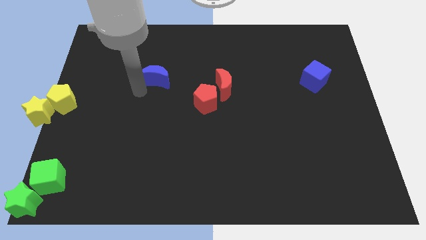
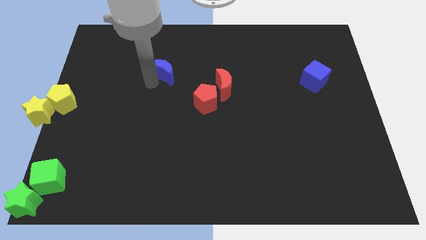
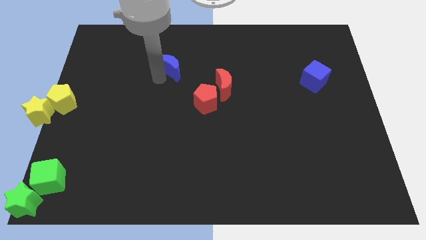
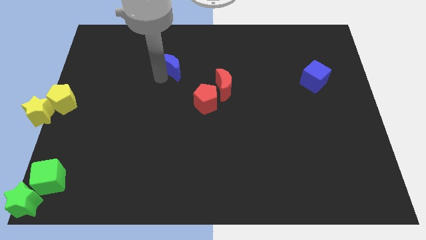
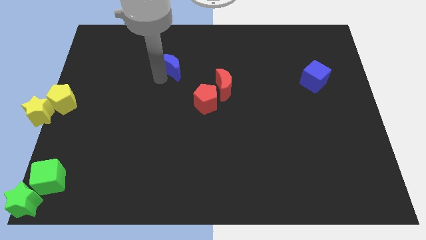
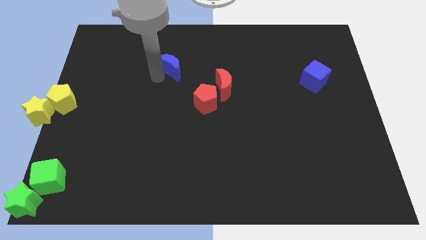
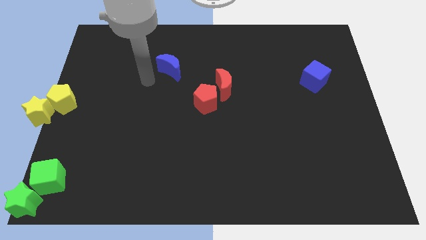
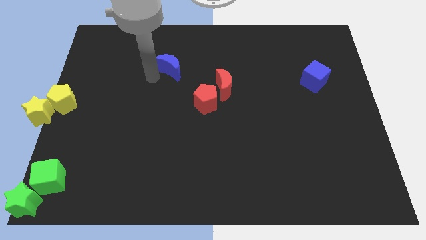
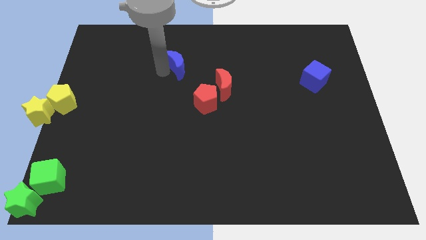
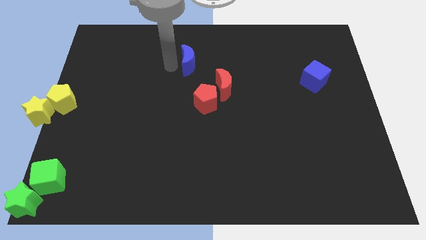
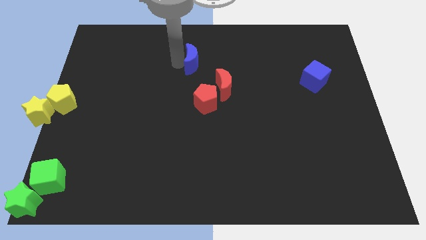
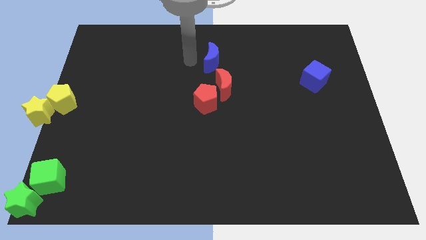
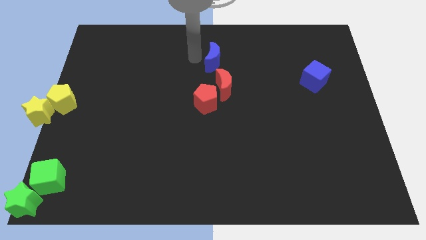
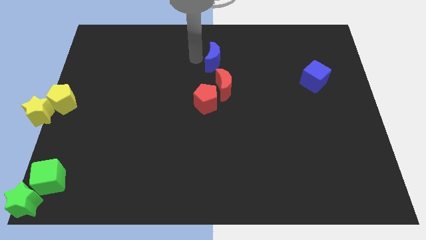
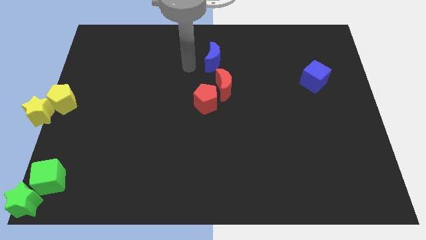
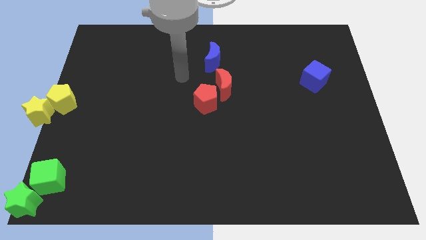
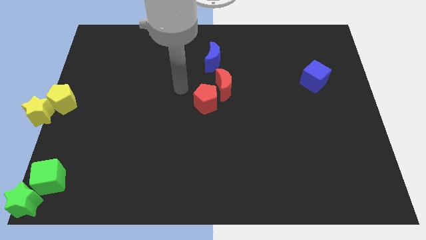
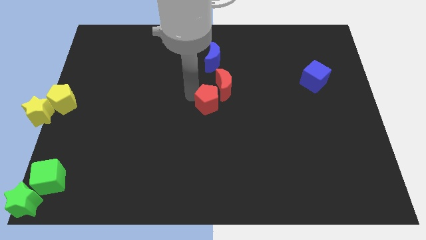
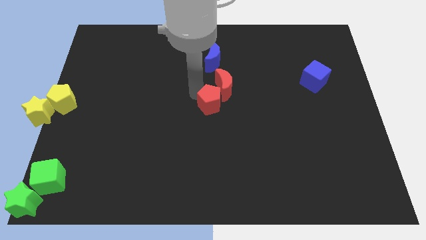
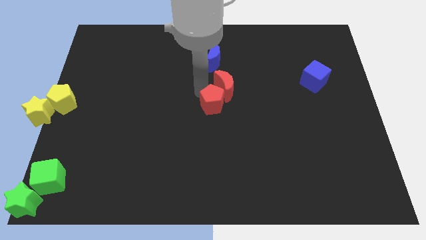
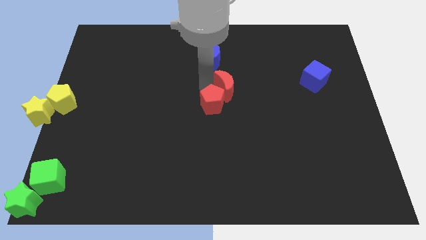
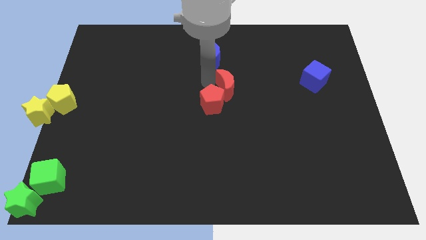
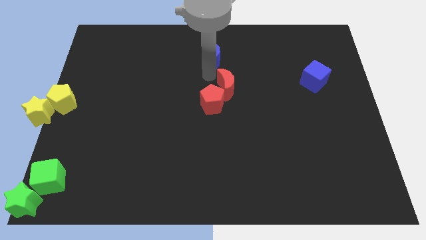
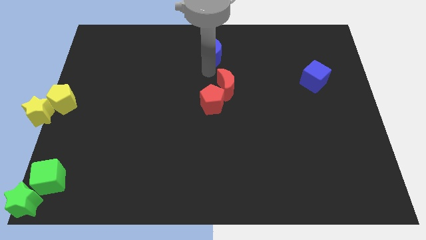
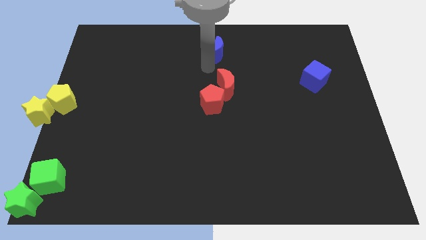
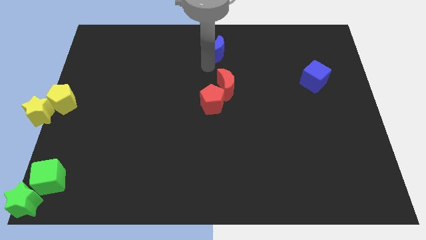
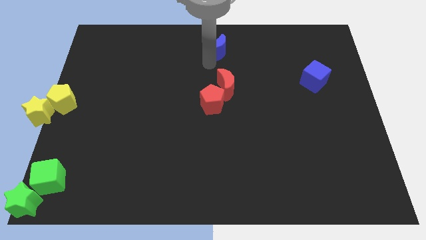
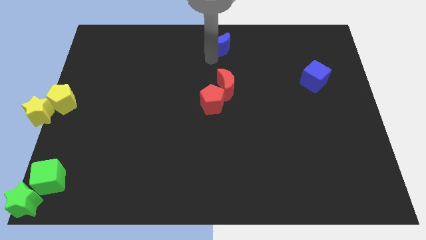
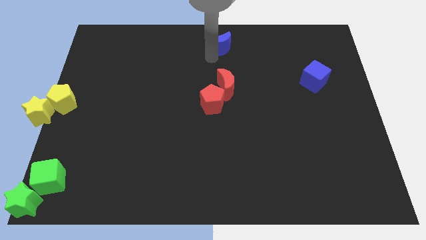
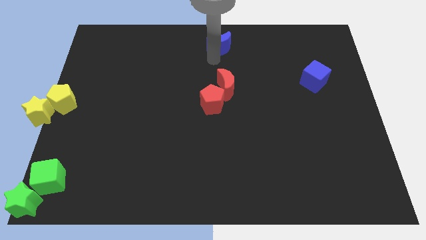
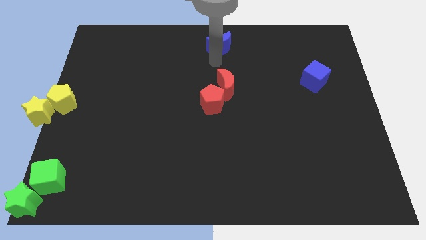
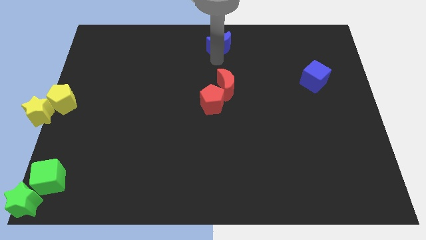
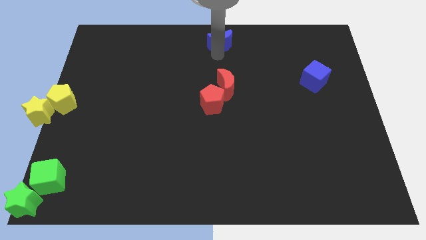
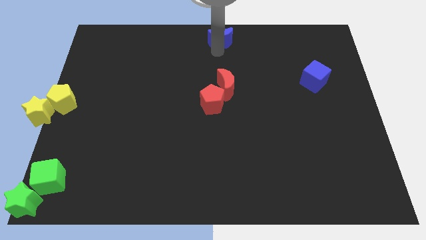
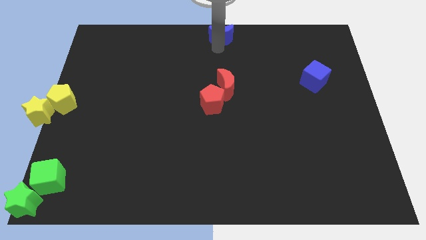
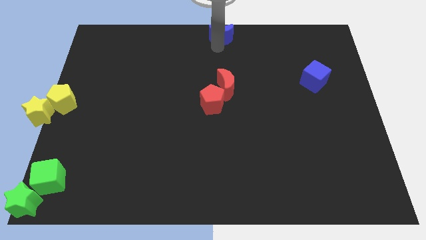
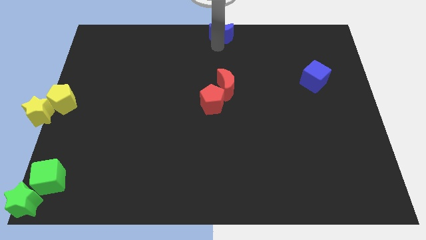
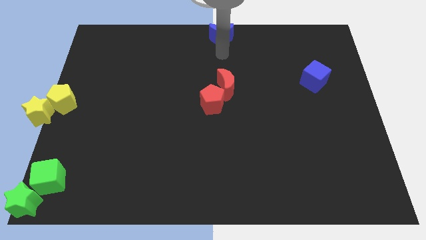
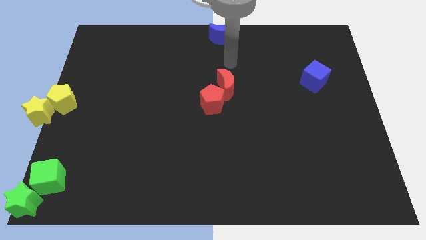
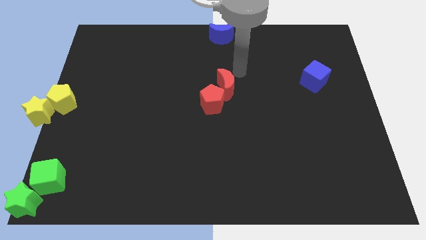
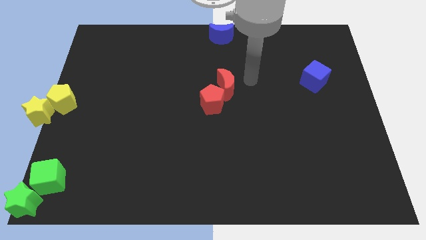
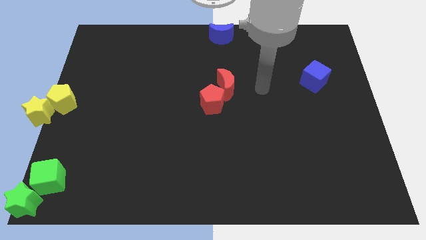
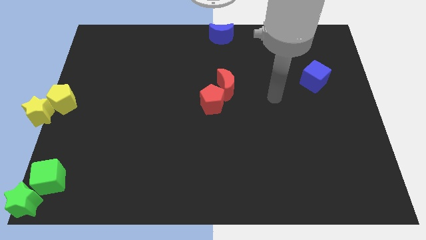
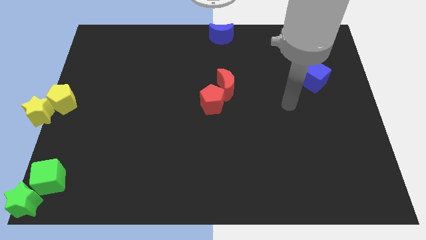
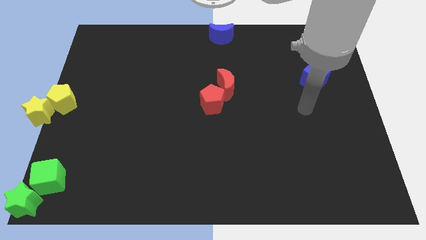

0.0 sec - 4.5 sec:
push the blue crescent towards the top center of the board

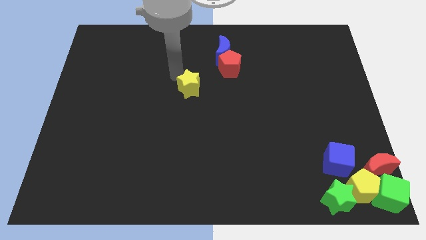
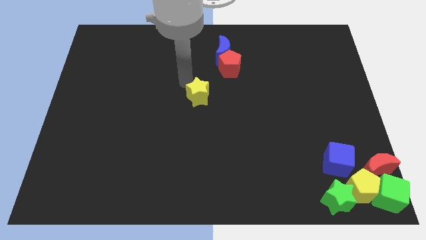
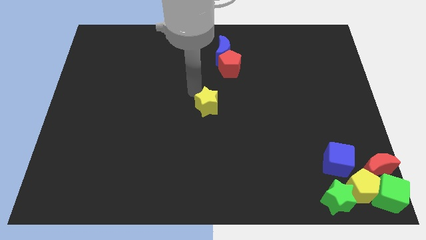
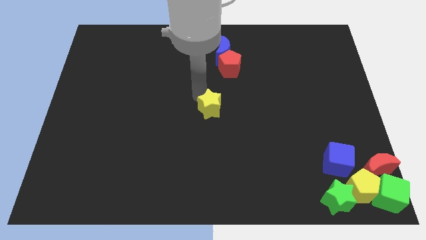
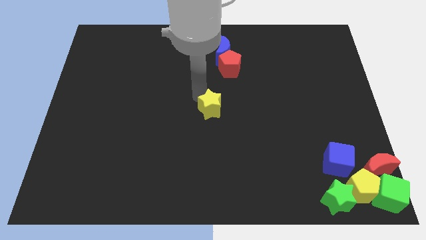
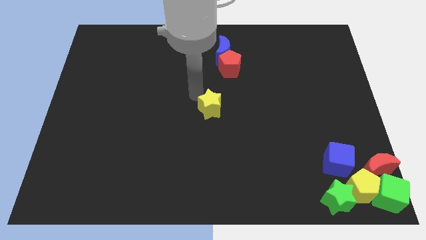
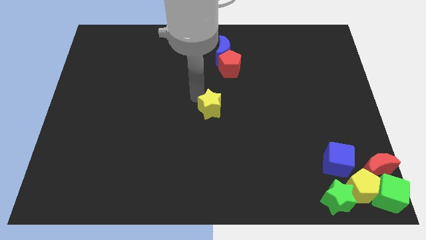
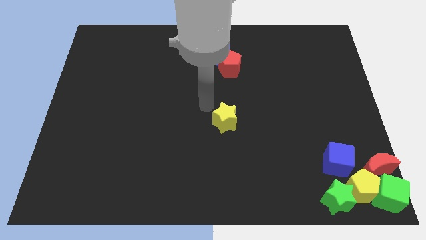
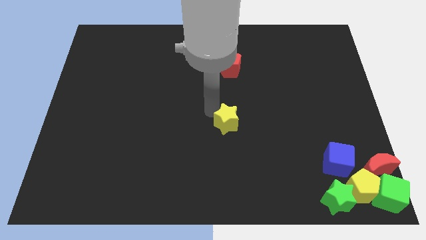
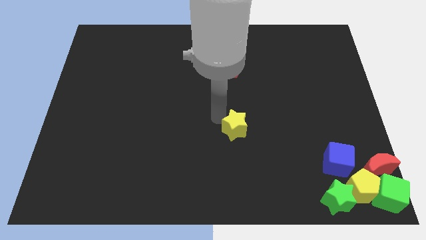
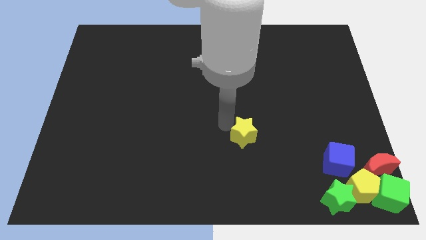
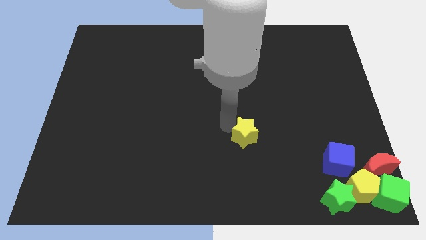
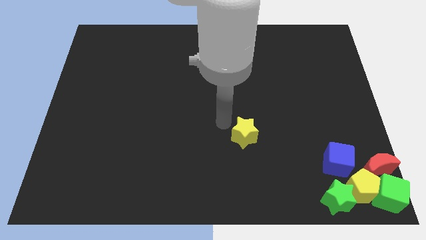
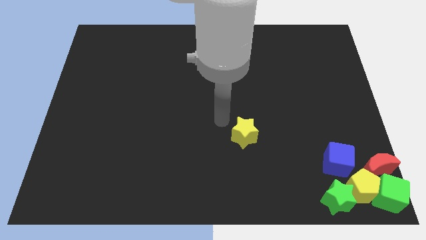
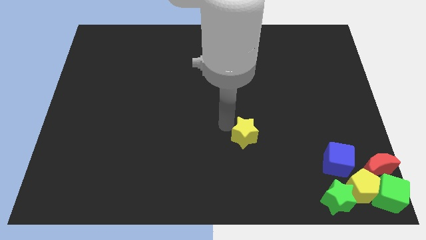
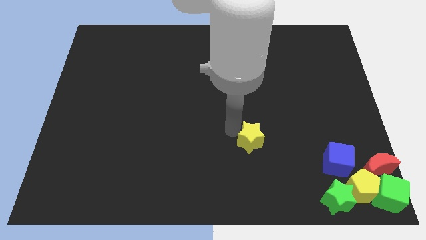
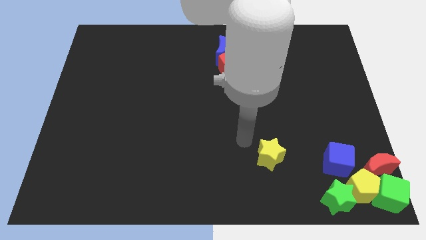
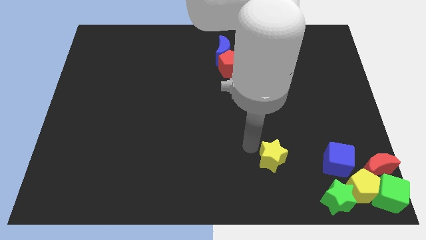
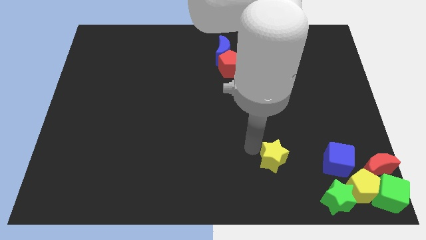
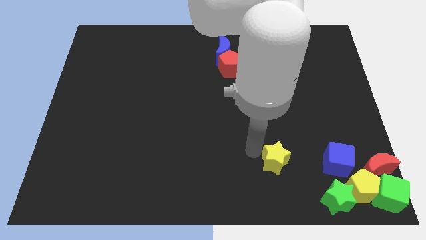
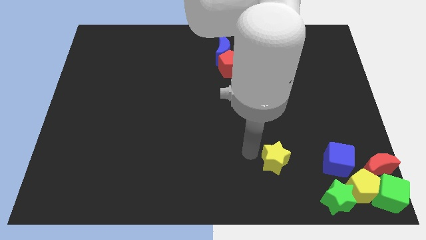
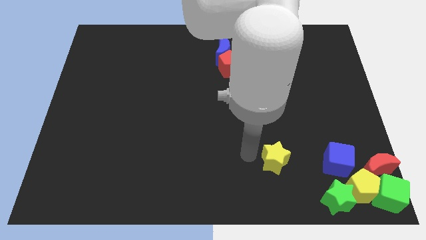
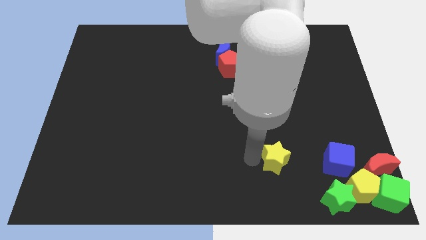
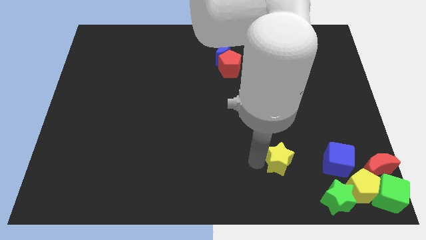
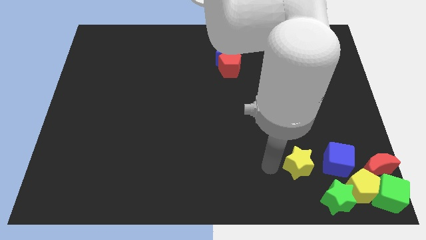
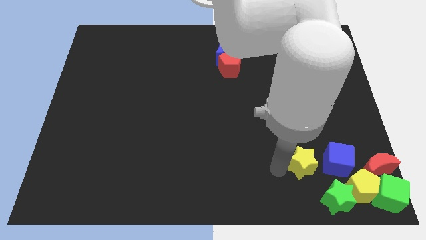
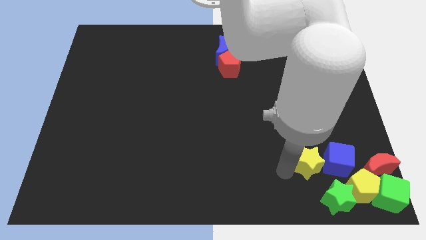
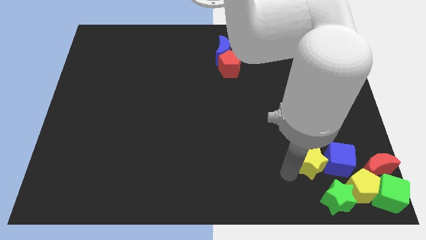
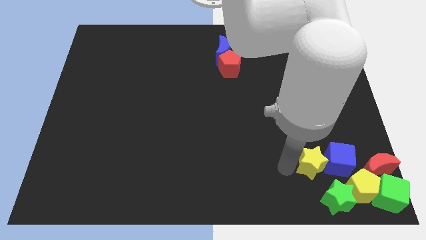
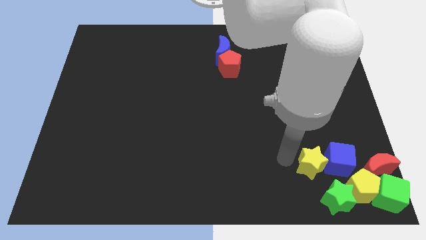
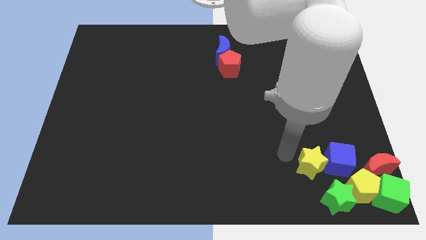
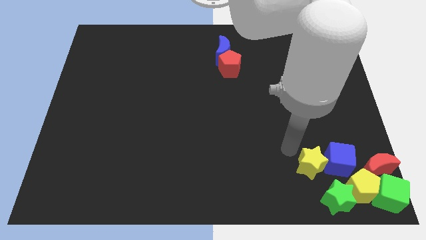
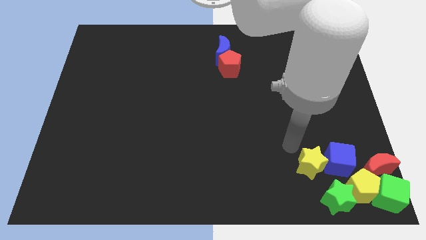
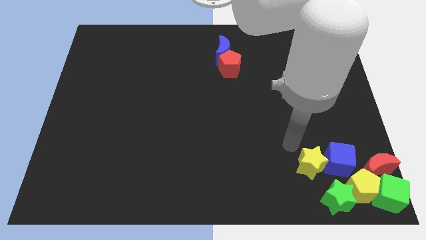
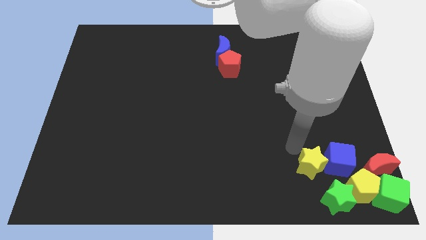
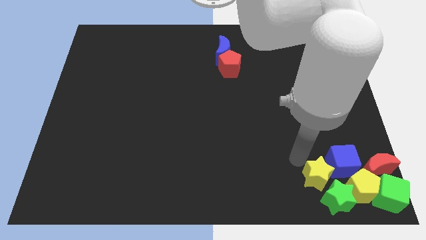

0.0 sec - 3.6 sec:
place yellow star beside blue blue cube

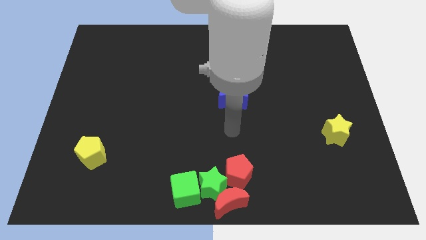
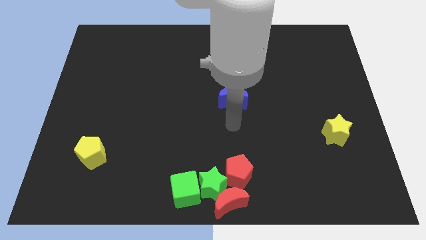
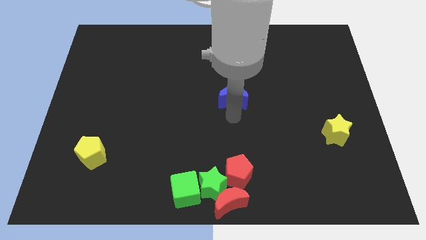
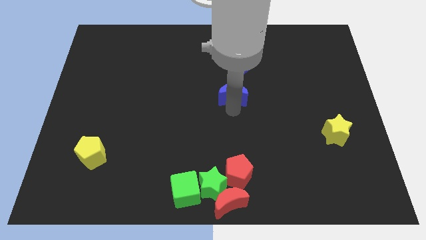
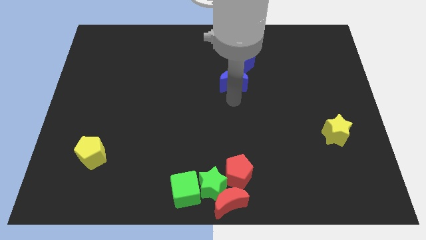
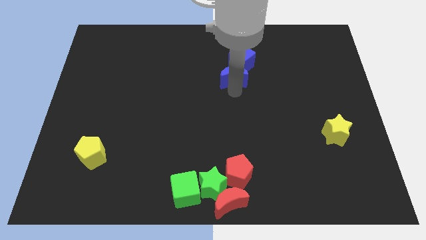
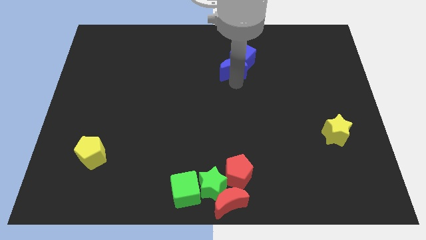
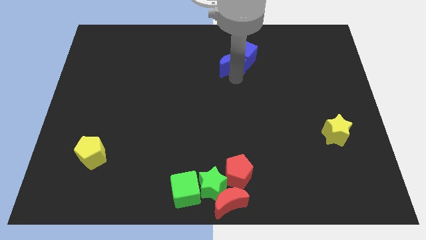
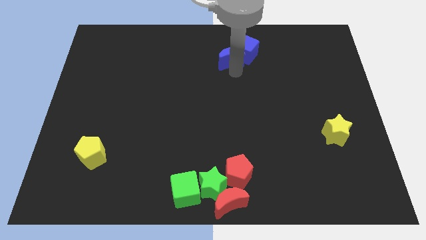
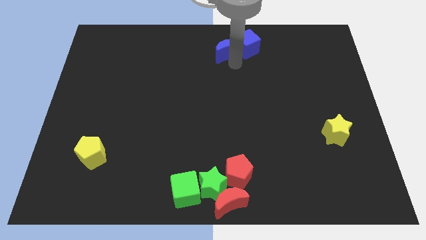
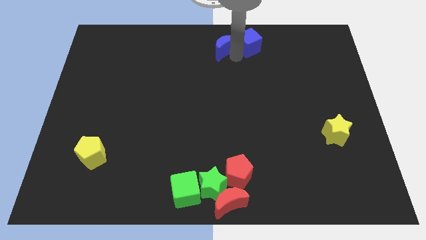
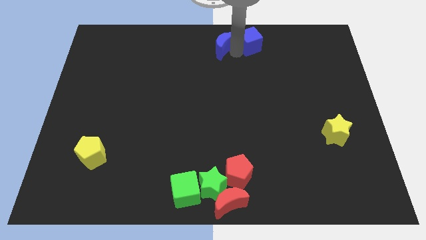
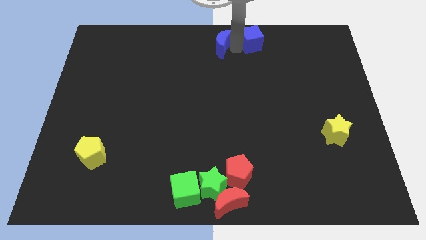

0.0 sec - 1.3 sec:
push both the blue blocks to the top side of the board
